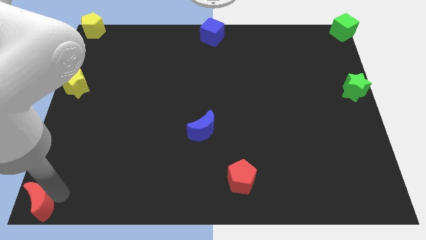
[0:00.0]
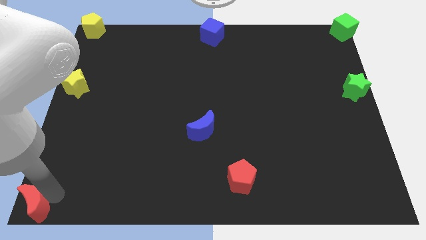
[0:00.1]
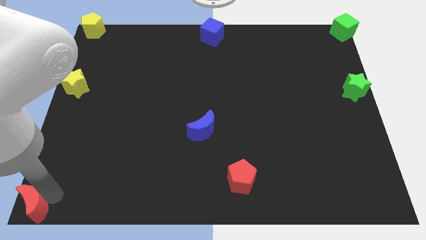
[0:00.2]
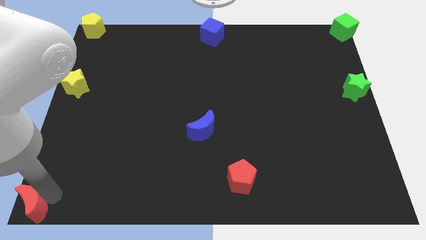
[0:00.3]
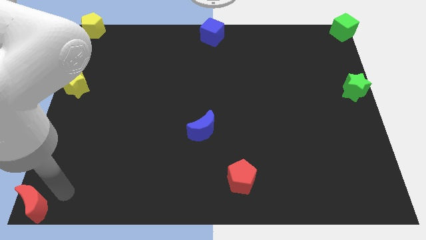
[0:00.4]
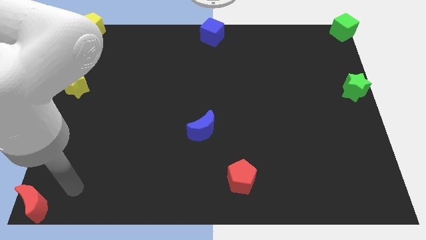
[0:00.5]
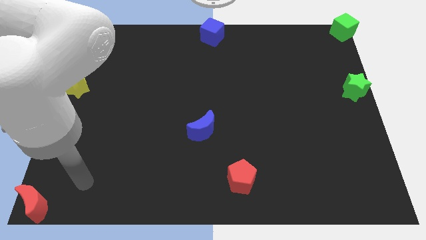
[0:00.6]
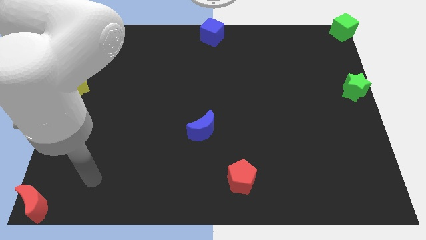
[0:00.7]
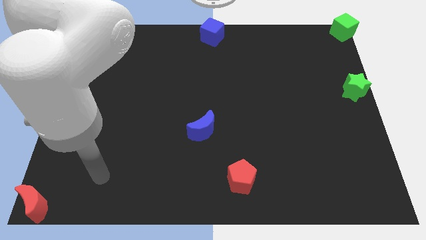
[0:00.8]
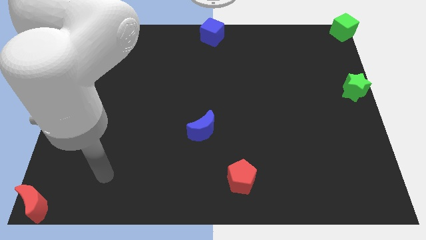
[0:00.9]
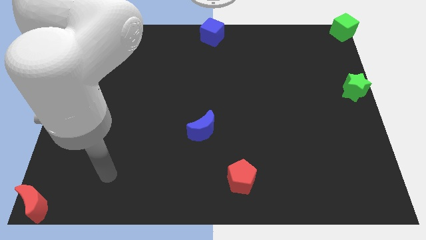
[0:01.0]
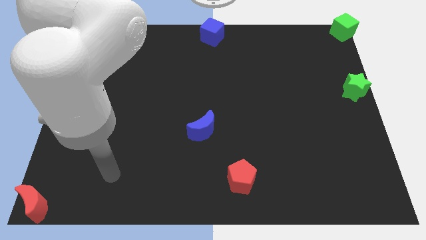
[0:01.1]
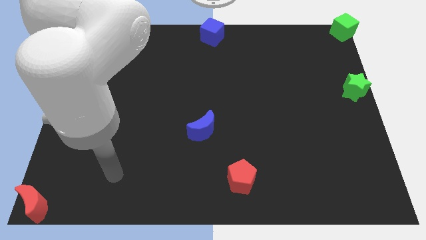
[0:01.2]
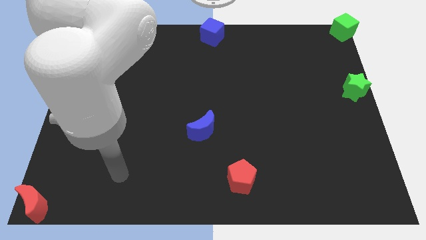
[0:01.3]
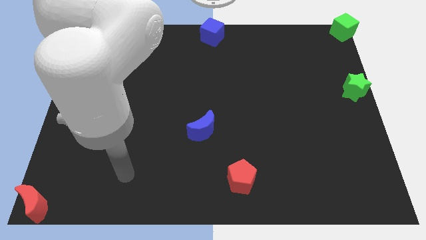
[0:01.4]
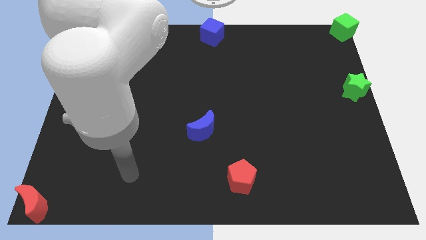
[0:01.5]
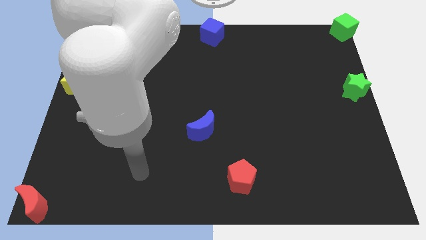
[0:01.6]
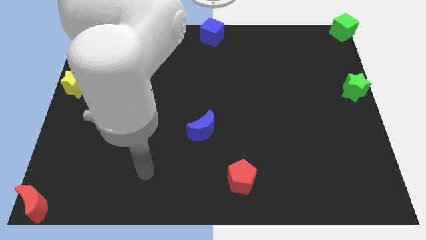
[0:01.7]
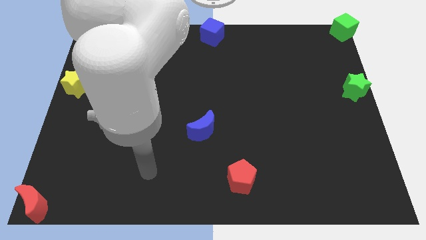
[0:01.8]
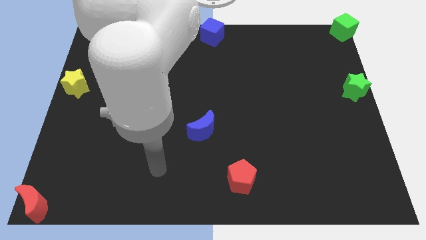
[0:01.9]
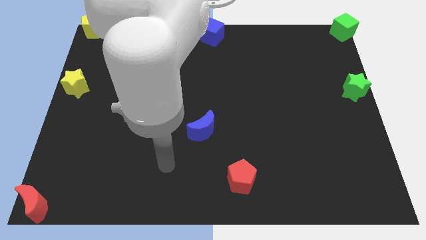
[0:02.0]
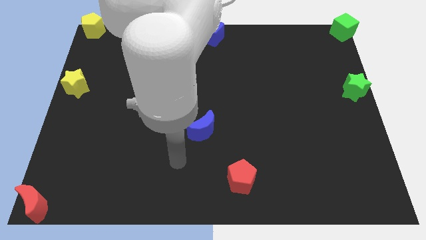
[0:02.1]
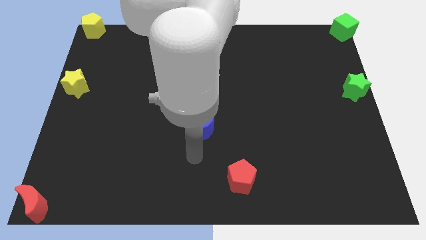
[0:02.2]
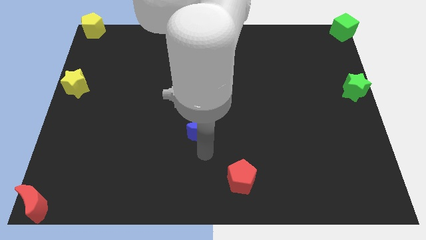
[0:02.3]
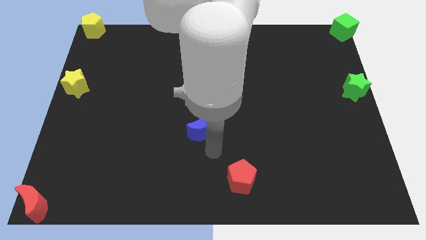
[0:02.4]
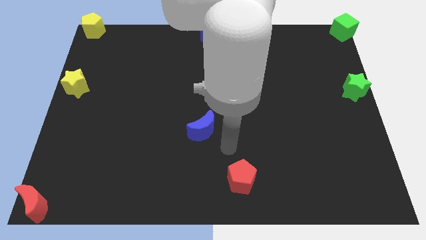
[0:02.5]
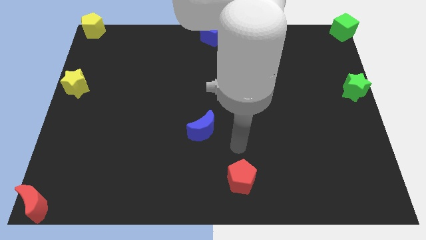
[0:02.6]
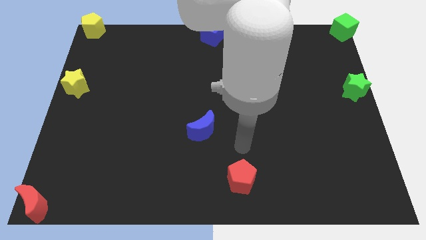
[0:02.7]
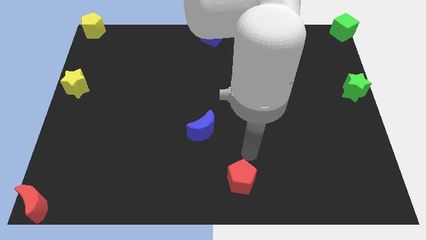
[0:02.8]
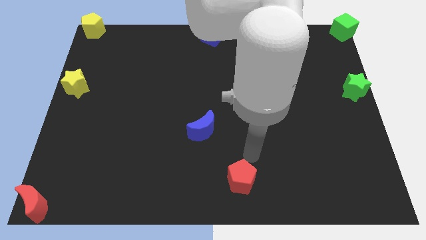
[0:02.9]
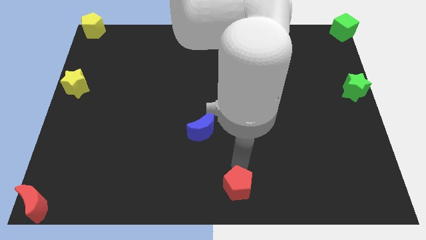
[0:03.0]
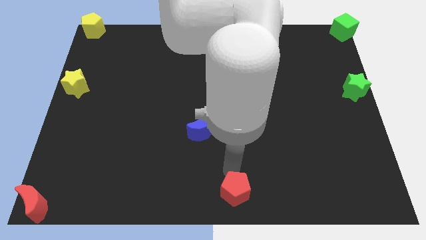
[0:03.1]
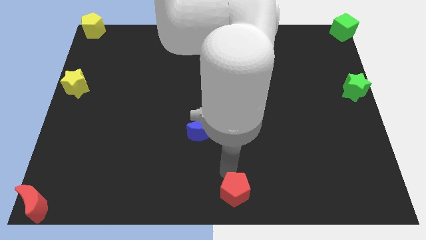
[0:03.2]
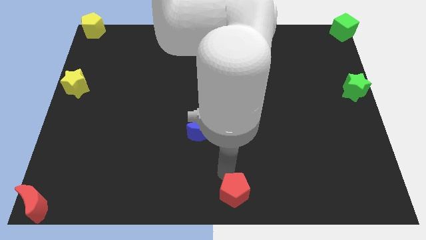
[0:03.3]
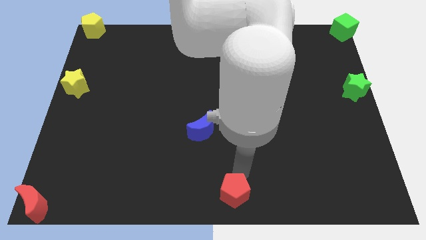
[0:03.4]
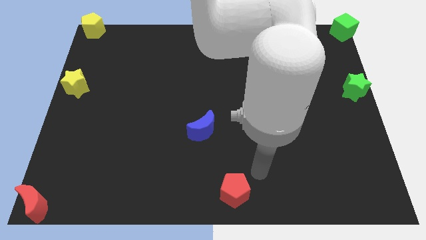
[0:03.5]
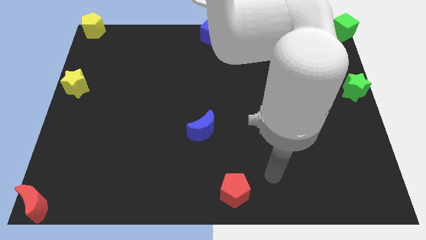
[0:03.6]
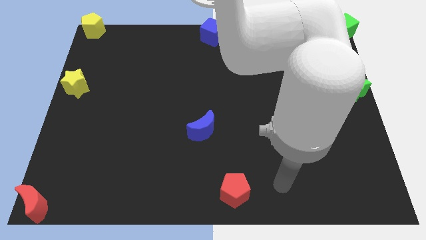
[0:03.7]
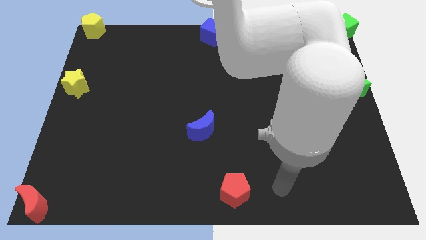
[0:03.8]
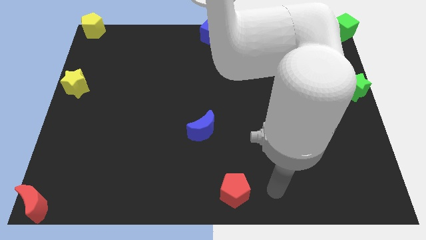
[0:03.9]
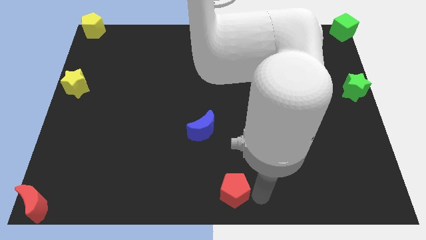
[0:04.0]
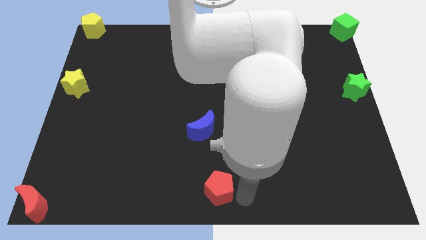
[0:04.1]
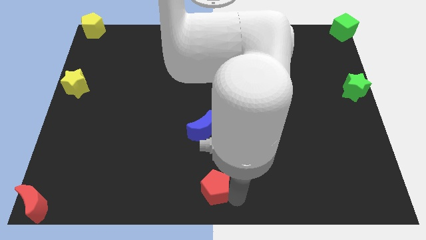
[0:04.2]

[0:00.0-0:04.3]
slightly push the red pentagon to the bottom center

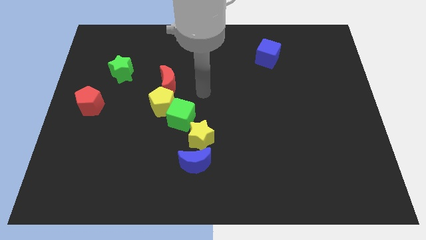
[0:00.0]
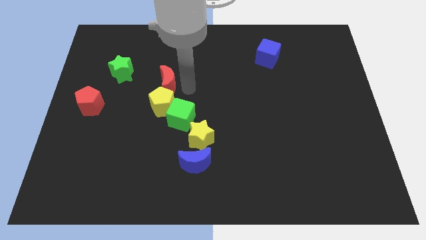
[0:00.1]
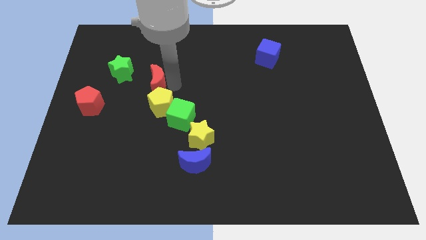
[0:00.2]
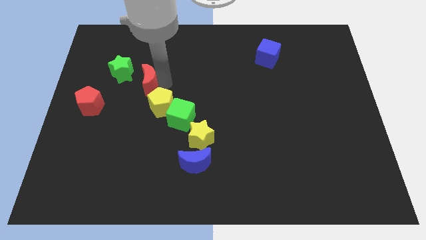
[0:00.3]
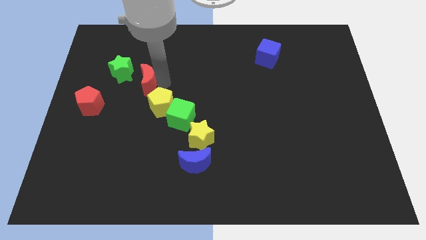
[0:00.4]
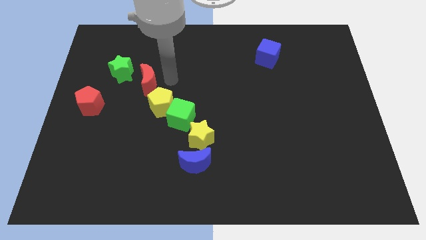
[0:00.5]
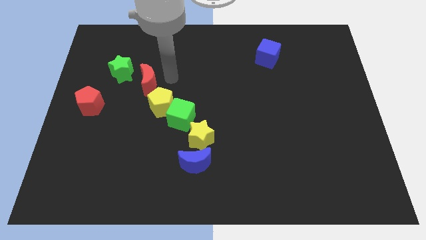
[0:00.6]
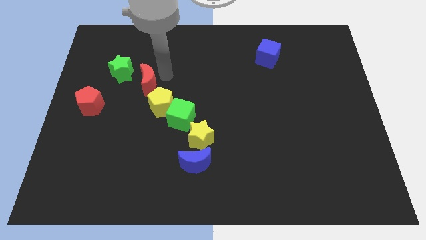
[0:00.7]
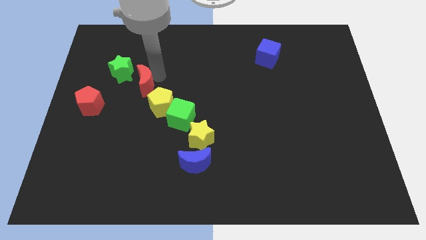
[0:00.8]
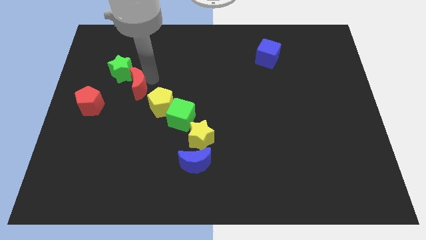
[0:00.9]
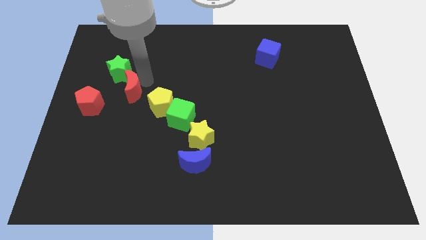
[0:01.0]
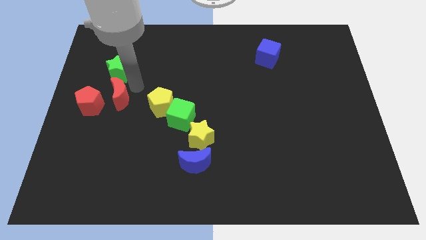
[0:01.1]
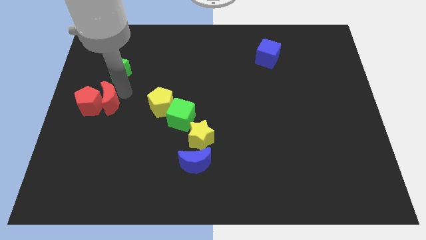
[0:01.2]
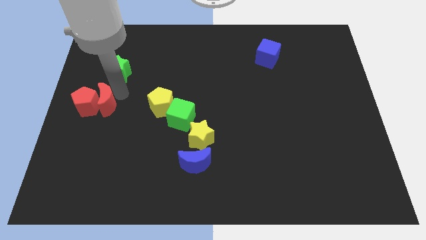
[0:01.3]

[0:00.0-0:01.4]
push the red moon into the red pentagon

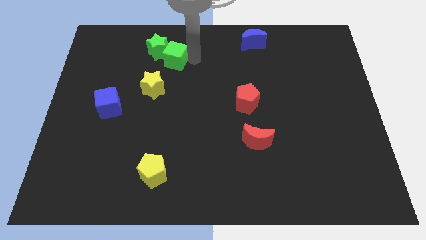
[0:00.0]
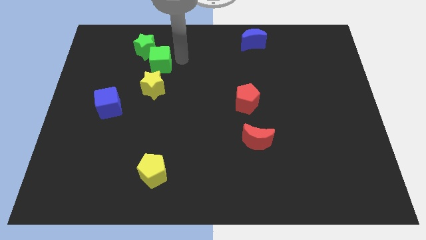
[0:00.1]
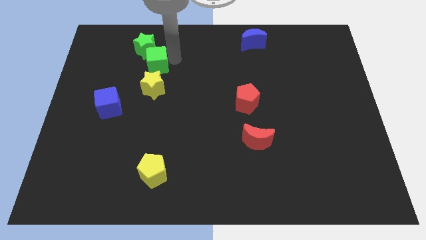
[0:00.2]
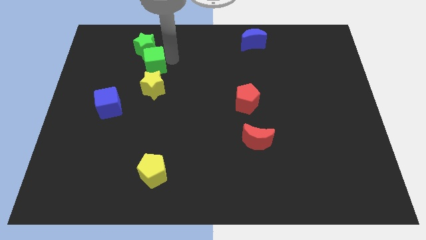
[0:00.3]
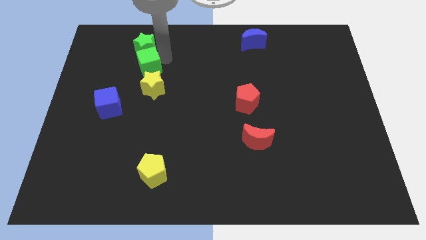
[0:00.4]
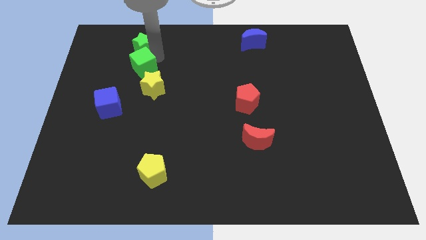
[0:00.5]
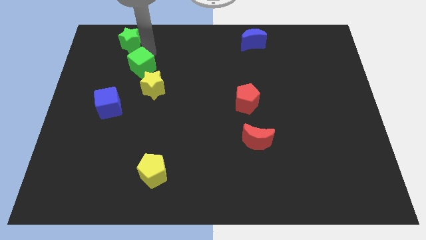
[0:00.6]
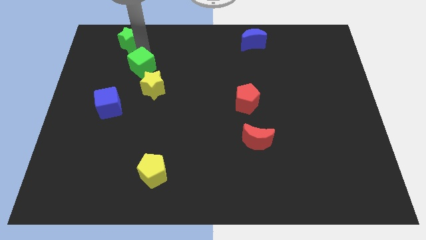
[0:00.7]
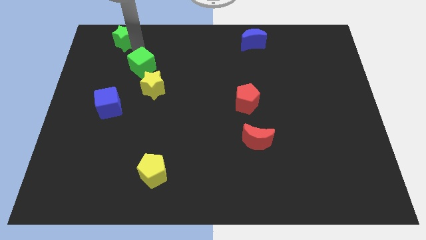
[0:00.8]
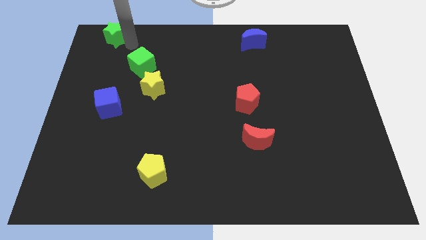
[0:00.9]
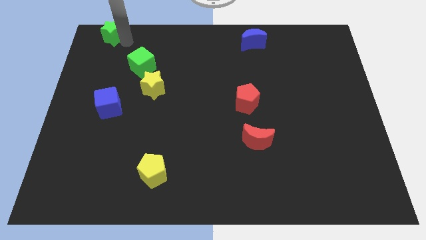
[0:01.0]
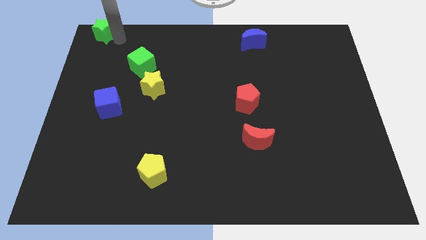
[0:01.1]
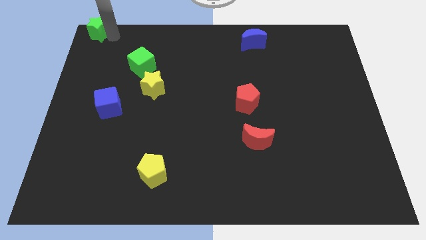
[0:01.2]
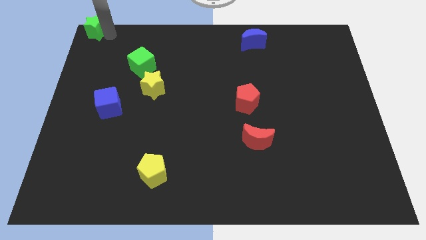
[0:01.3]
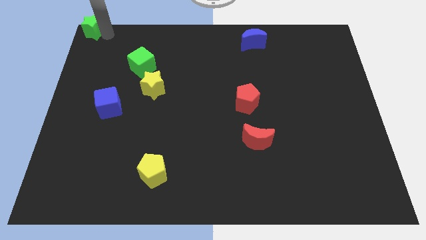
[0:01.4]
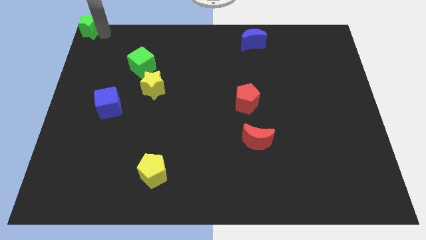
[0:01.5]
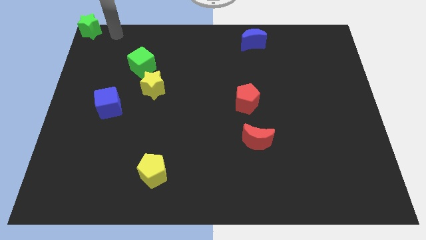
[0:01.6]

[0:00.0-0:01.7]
place the green star at the top left corner

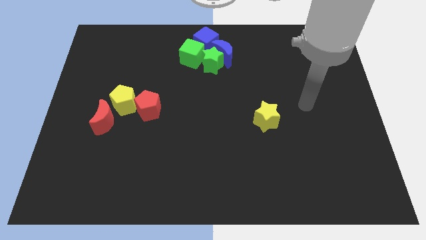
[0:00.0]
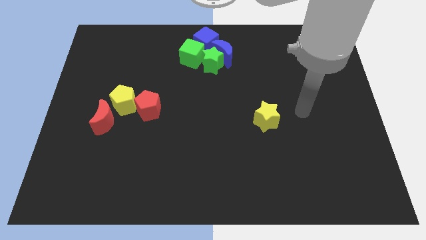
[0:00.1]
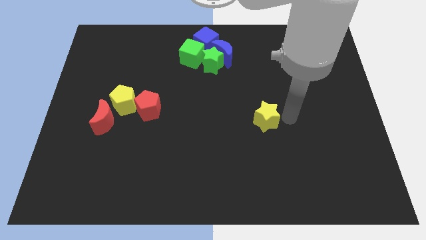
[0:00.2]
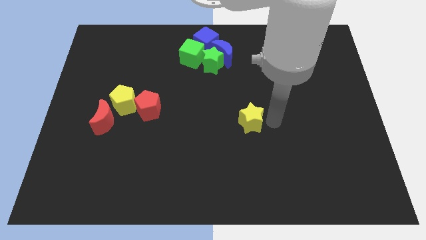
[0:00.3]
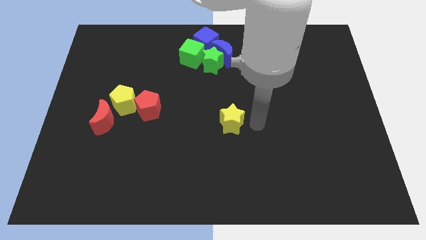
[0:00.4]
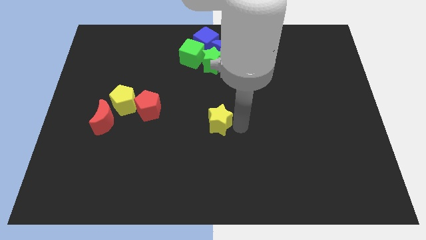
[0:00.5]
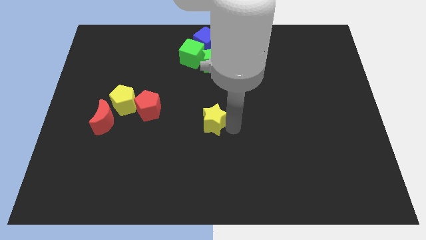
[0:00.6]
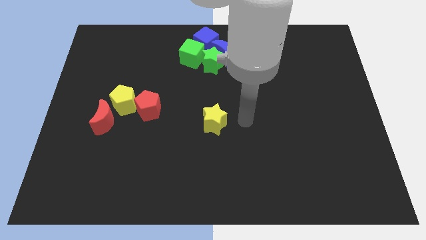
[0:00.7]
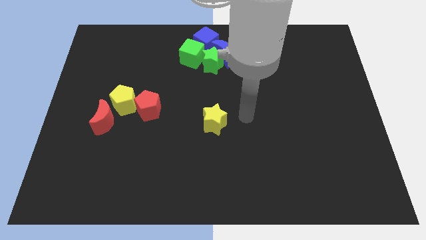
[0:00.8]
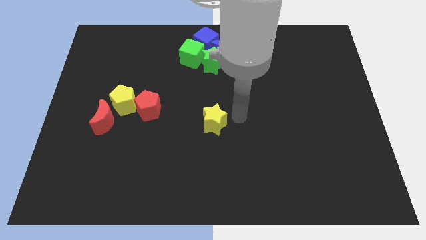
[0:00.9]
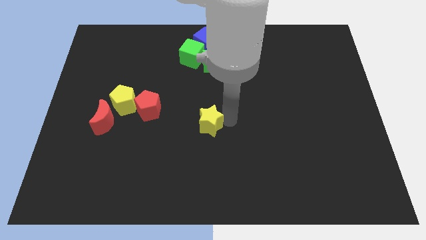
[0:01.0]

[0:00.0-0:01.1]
push the yellow star towards the center of the board

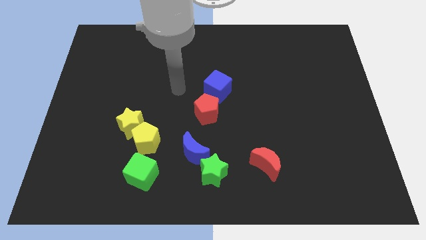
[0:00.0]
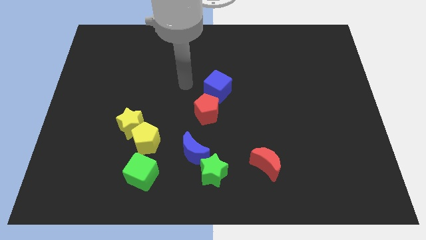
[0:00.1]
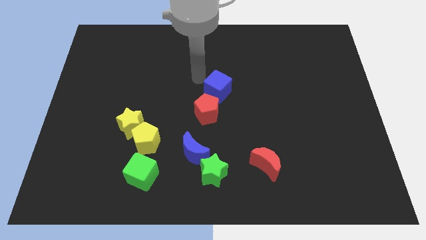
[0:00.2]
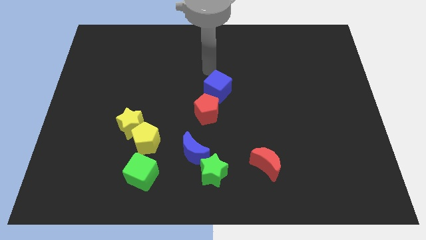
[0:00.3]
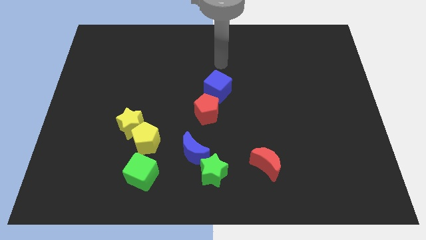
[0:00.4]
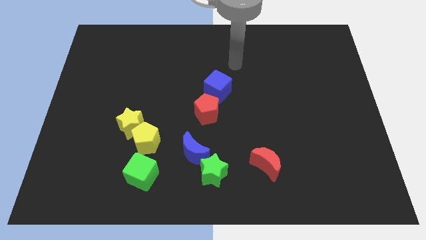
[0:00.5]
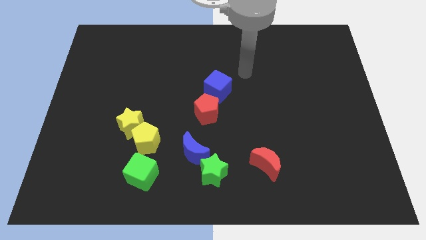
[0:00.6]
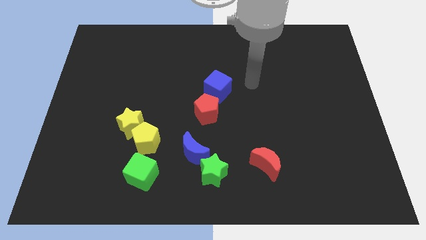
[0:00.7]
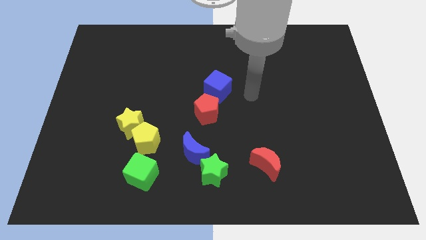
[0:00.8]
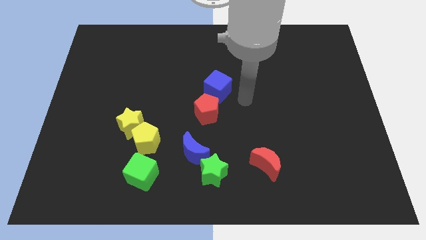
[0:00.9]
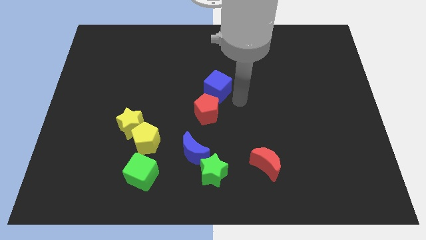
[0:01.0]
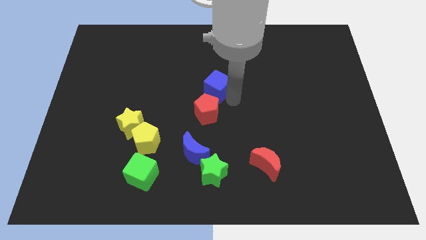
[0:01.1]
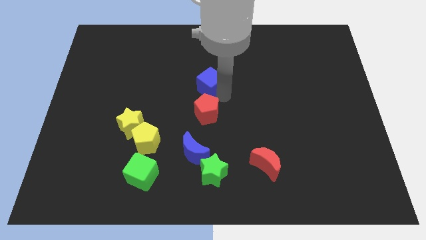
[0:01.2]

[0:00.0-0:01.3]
move arm near blue cube
